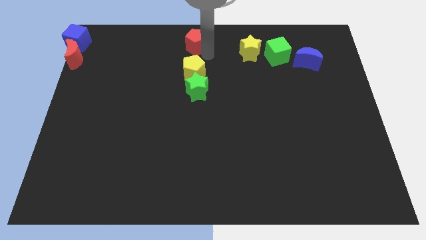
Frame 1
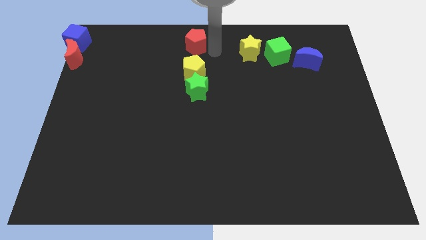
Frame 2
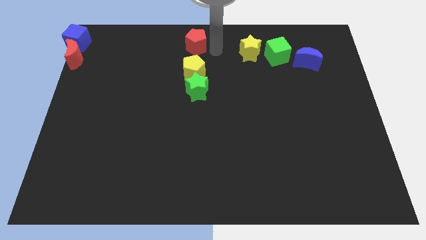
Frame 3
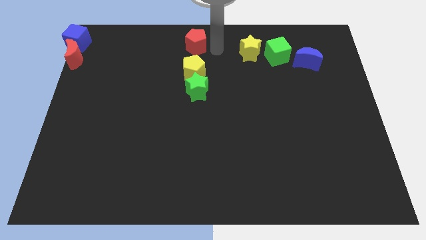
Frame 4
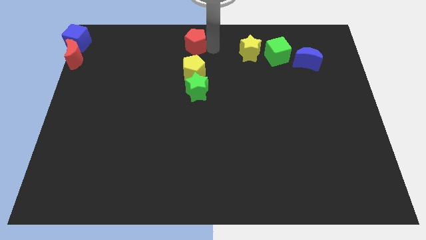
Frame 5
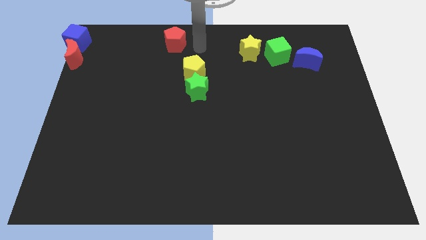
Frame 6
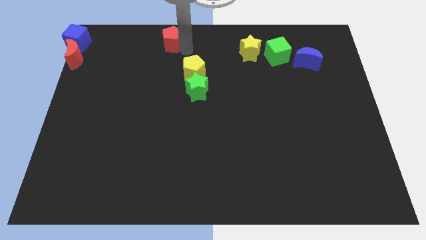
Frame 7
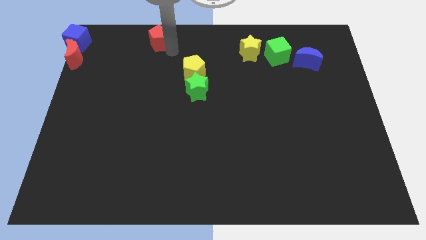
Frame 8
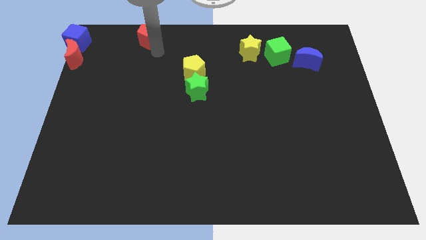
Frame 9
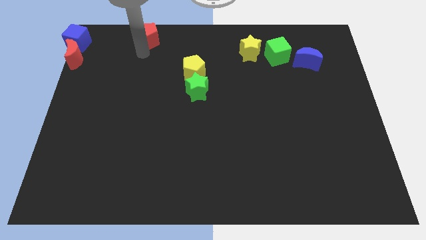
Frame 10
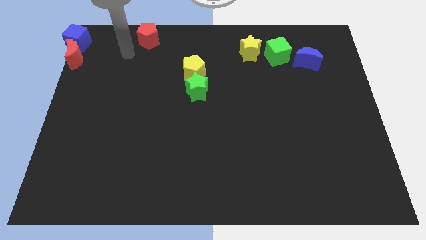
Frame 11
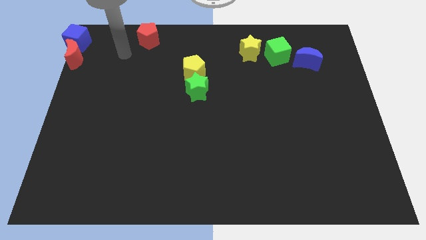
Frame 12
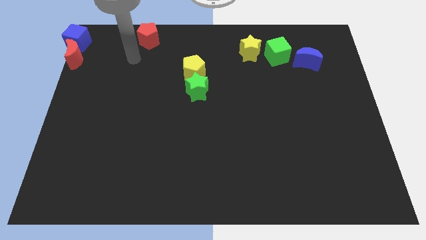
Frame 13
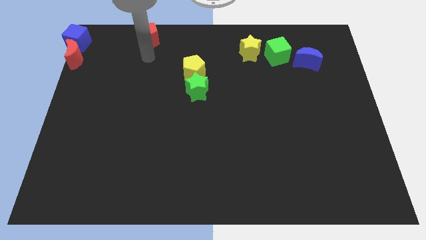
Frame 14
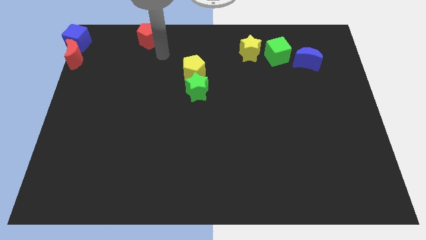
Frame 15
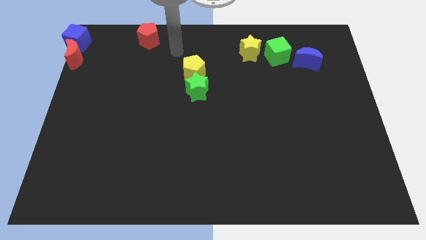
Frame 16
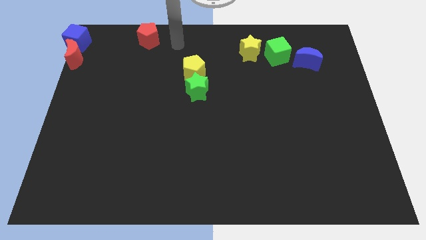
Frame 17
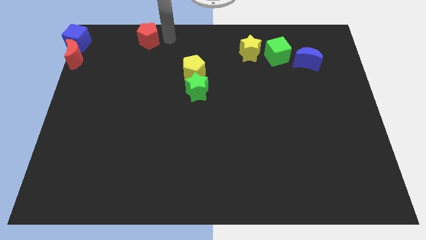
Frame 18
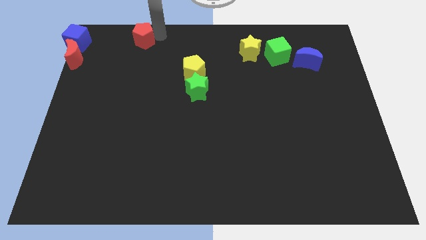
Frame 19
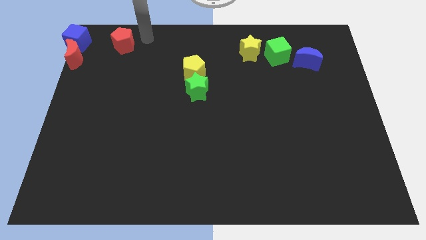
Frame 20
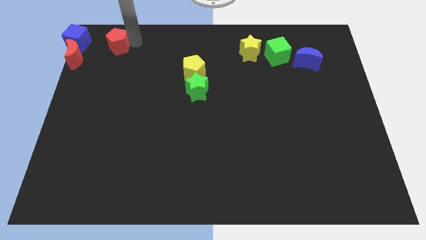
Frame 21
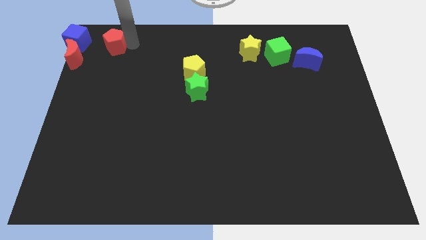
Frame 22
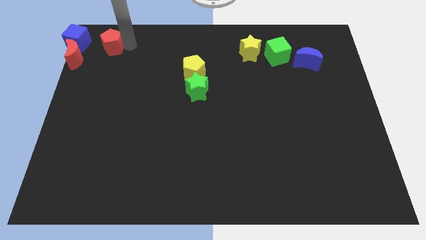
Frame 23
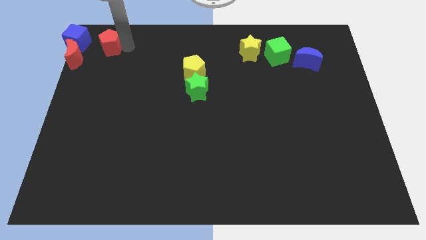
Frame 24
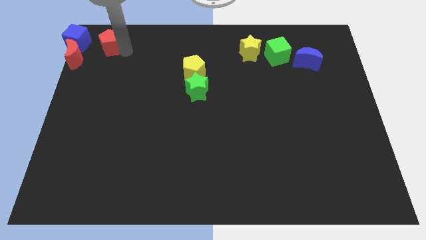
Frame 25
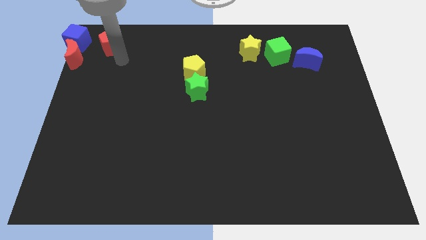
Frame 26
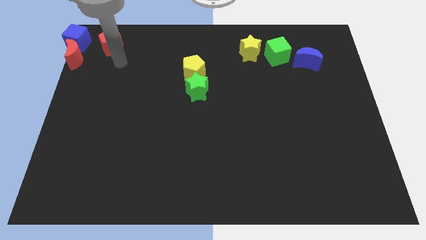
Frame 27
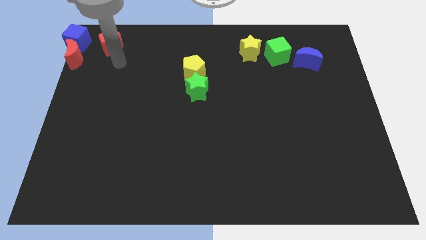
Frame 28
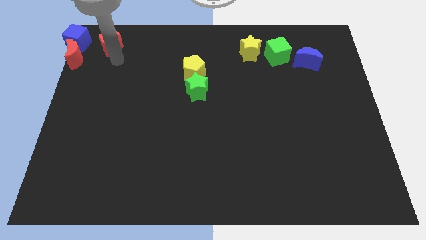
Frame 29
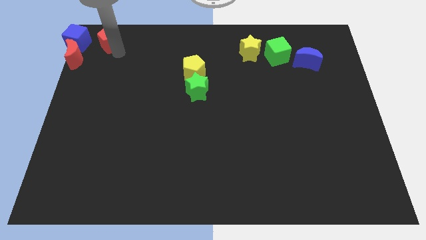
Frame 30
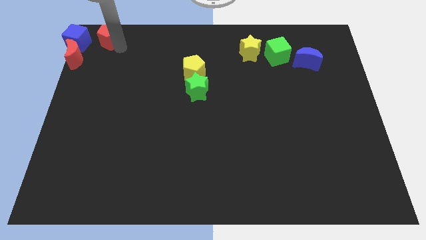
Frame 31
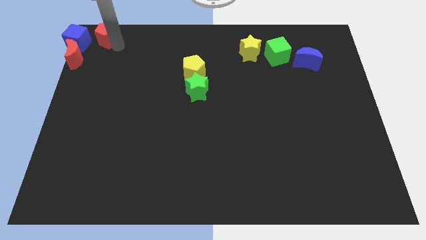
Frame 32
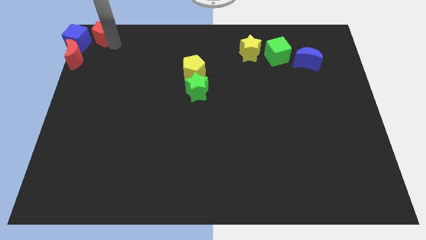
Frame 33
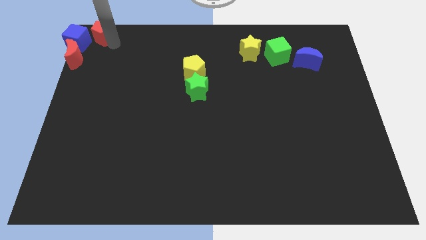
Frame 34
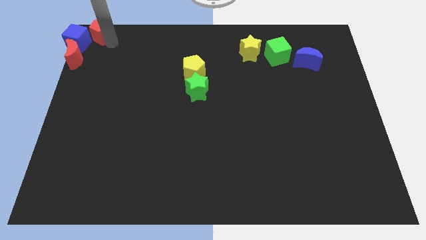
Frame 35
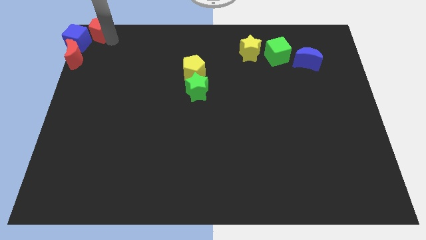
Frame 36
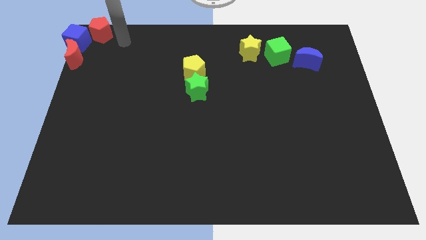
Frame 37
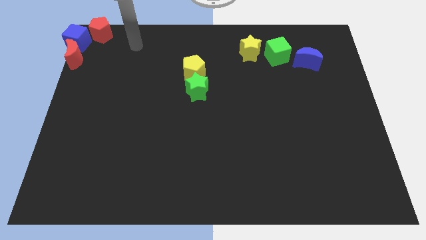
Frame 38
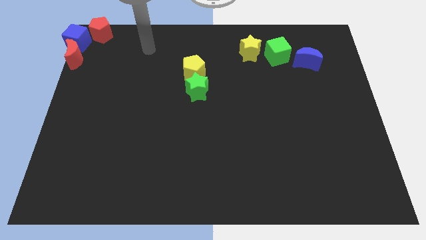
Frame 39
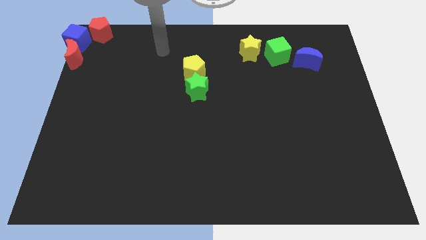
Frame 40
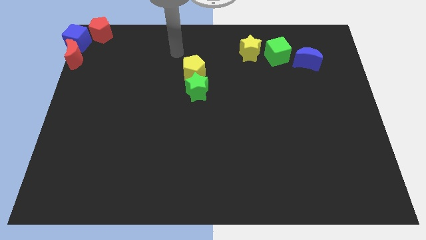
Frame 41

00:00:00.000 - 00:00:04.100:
push the red pentagon to the top left corner of the board

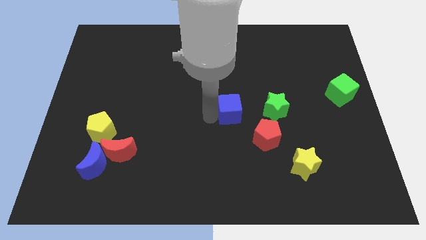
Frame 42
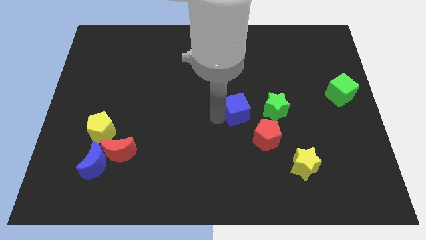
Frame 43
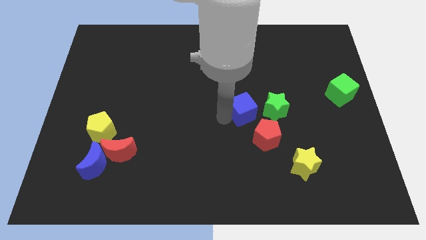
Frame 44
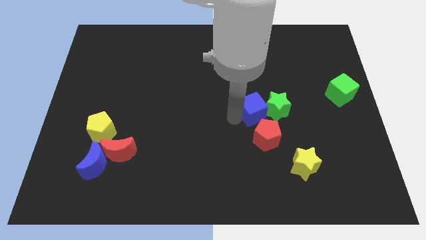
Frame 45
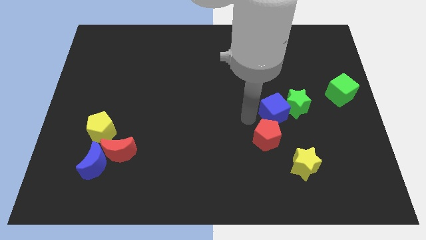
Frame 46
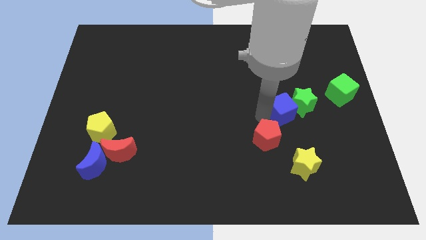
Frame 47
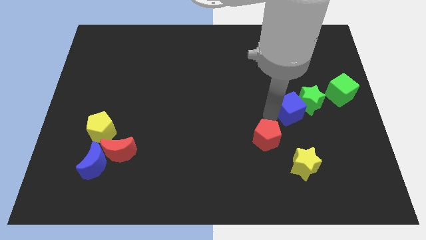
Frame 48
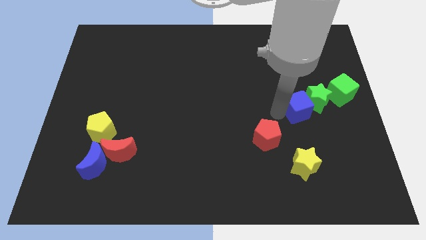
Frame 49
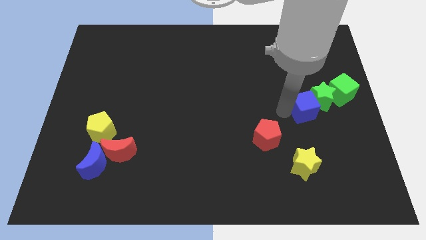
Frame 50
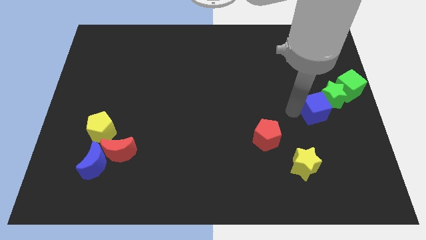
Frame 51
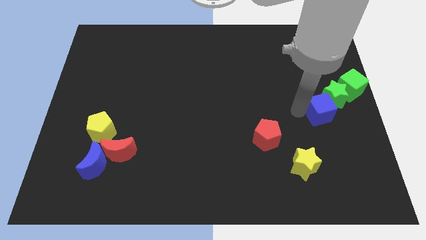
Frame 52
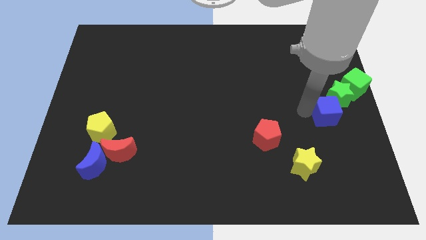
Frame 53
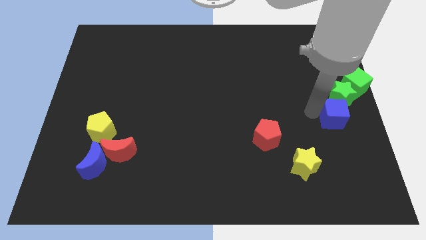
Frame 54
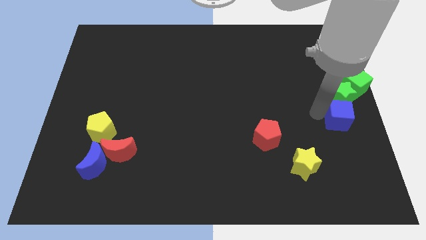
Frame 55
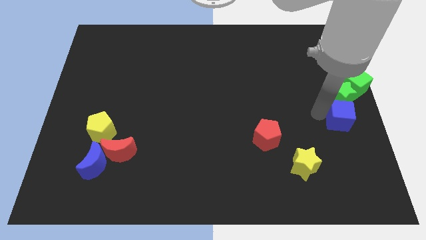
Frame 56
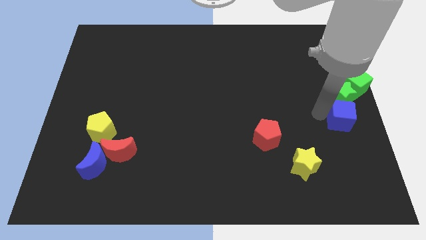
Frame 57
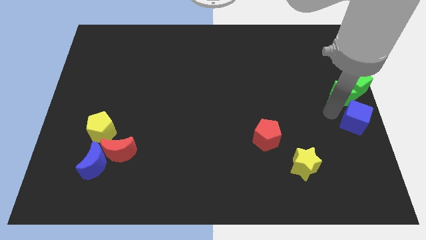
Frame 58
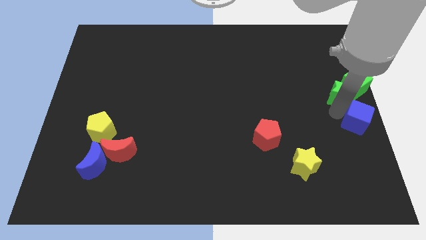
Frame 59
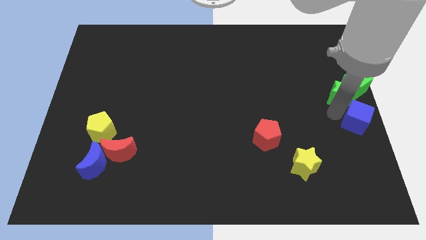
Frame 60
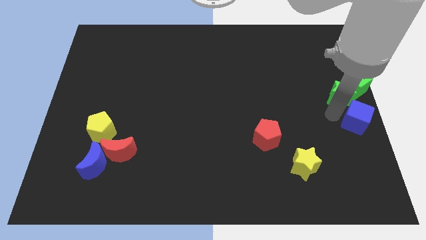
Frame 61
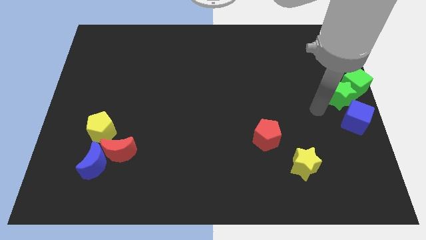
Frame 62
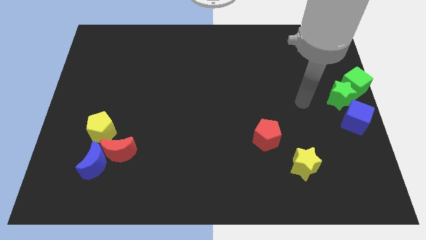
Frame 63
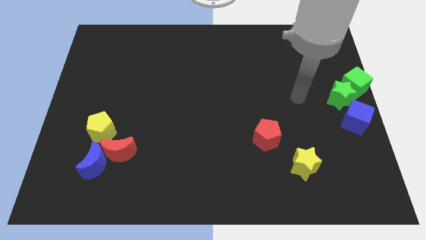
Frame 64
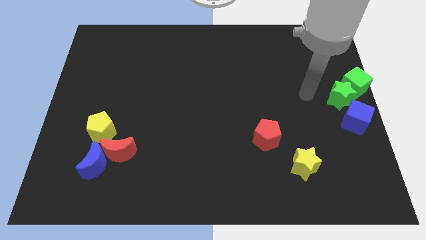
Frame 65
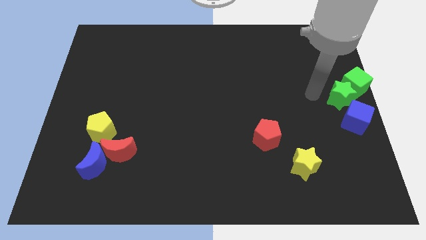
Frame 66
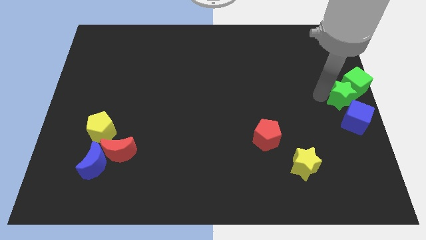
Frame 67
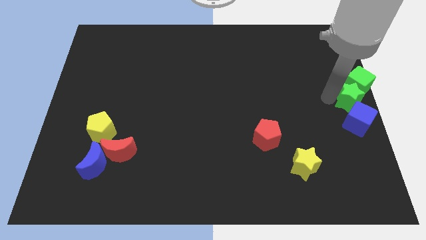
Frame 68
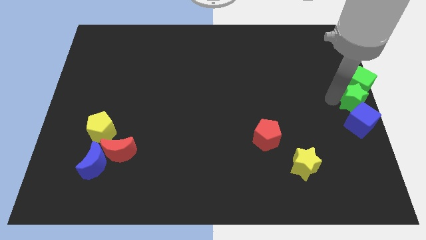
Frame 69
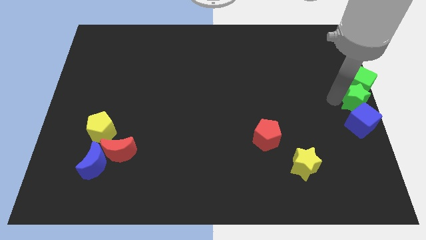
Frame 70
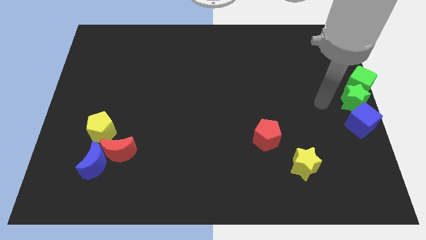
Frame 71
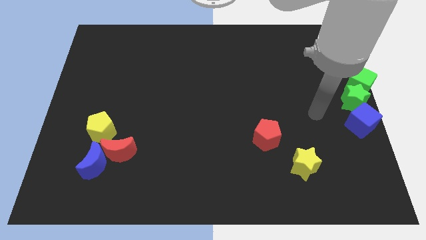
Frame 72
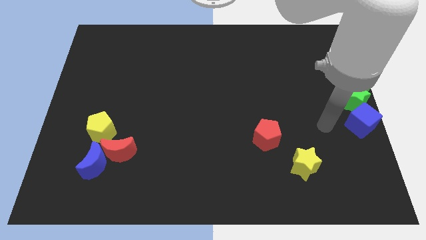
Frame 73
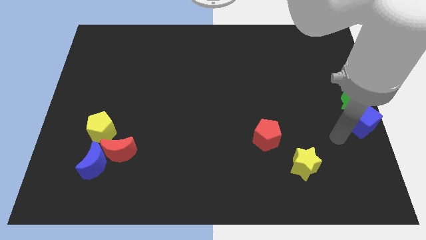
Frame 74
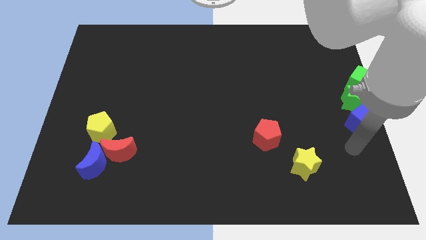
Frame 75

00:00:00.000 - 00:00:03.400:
put the green star and blue cube in a line vertically below the green cube

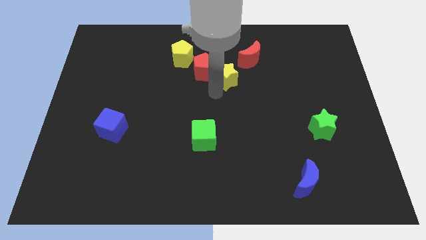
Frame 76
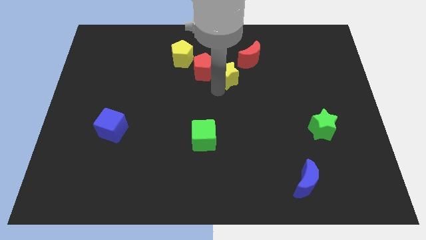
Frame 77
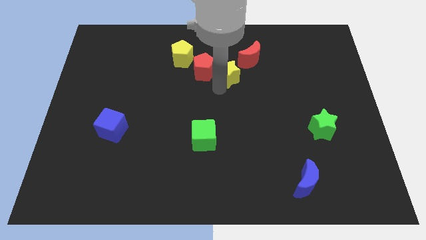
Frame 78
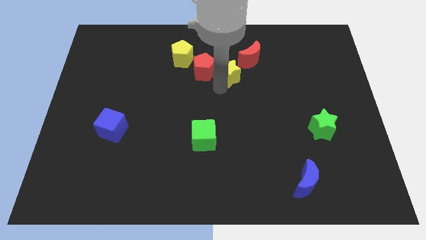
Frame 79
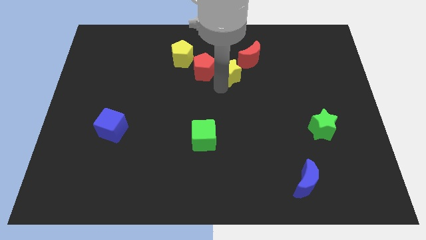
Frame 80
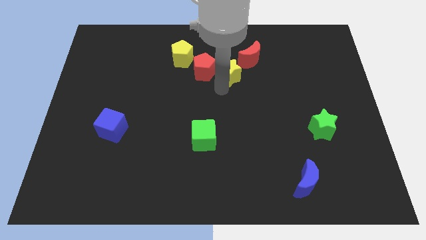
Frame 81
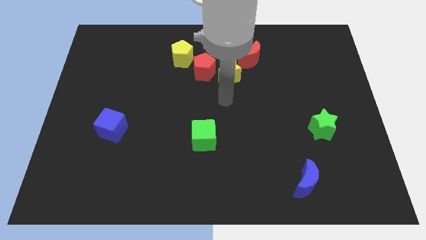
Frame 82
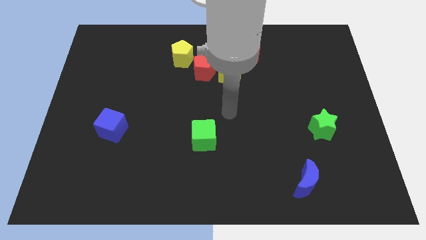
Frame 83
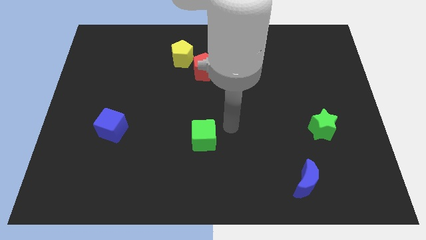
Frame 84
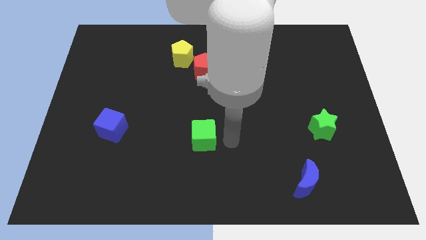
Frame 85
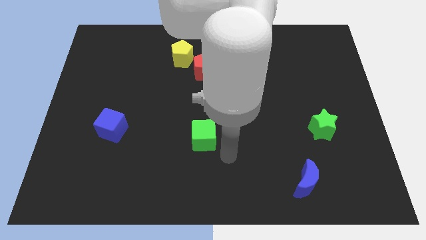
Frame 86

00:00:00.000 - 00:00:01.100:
move the yellow star close to the red pentagon

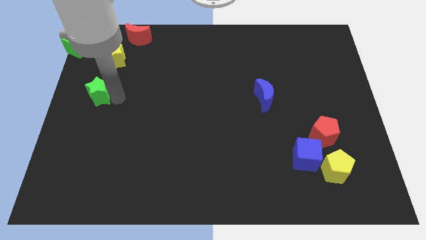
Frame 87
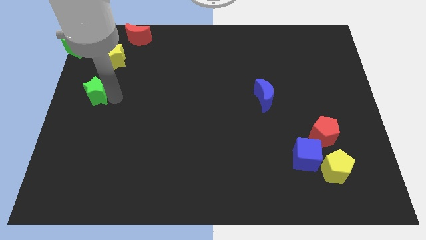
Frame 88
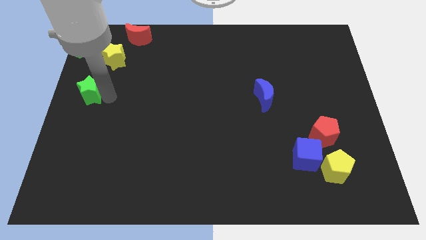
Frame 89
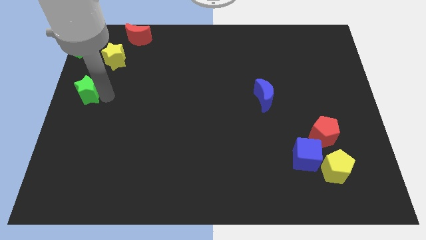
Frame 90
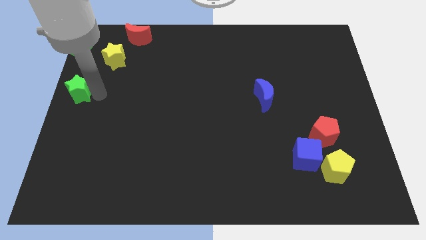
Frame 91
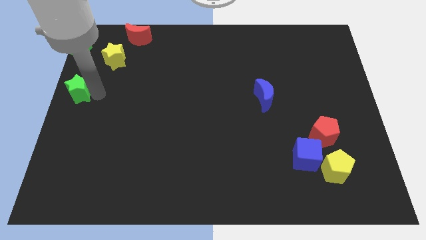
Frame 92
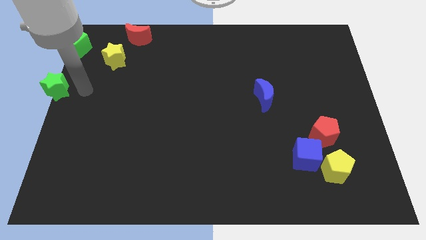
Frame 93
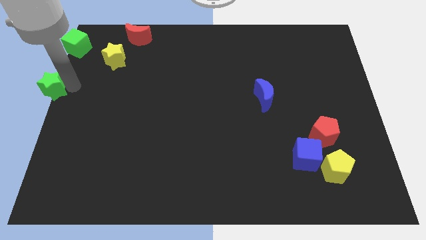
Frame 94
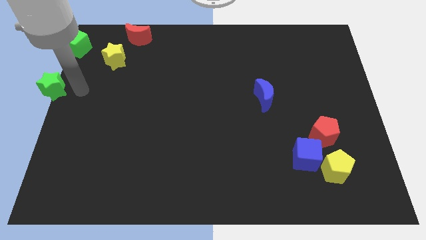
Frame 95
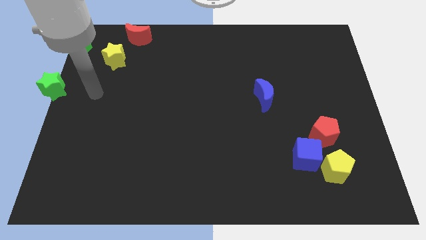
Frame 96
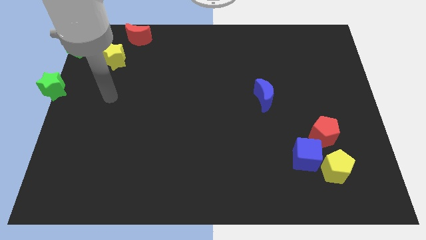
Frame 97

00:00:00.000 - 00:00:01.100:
slide green star to the center left of the board
